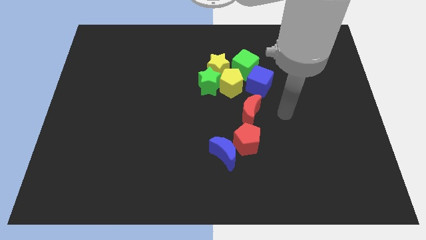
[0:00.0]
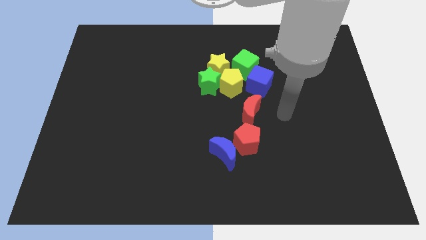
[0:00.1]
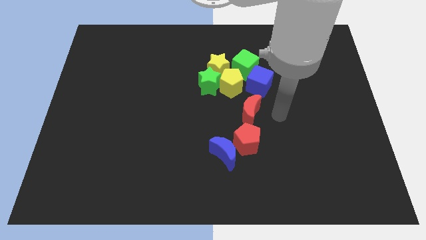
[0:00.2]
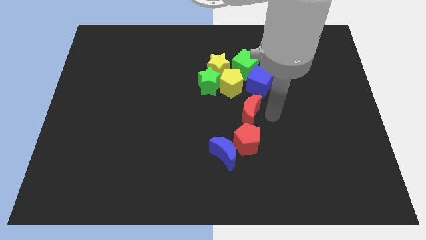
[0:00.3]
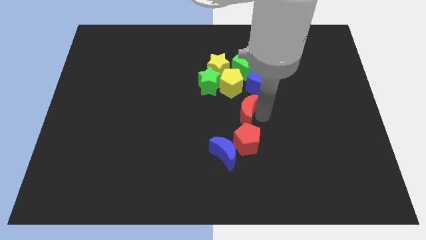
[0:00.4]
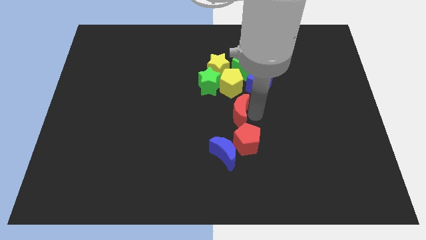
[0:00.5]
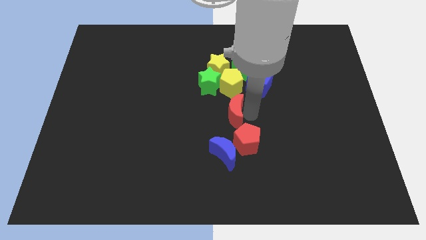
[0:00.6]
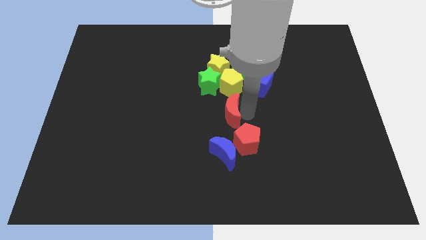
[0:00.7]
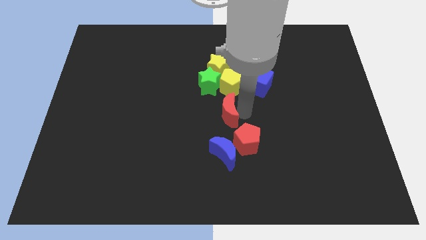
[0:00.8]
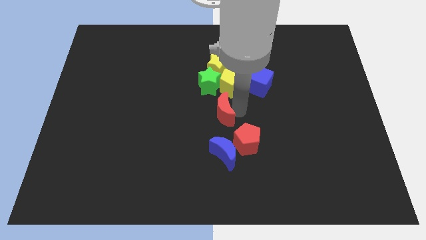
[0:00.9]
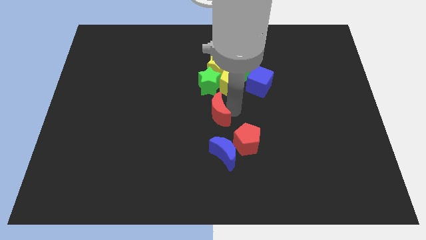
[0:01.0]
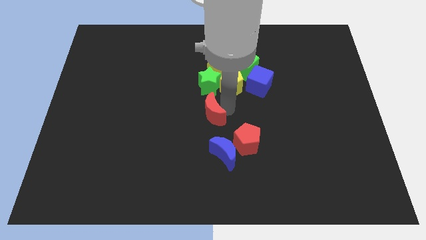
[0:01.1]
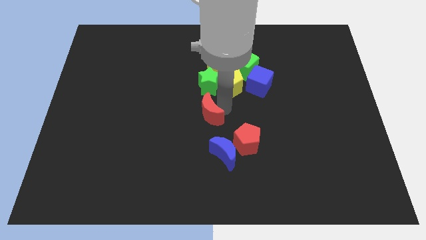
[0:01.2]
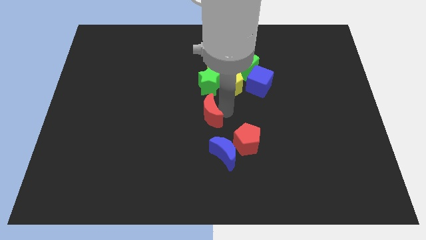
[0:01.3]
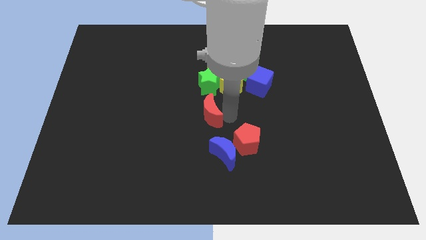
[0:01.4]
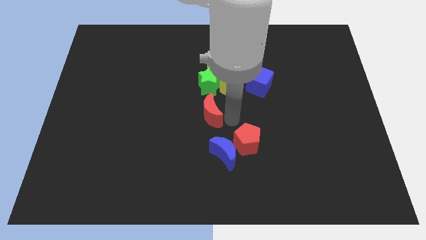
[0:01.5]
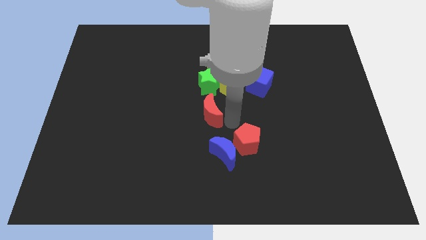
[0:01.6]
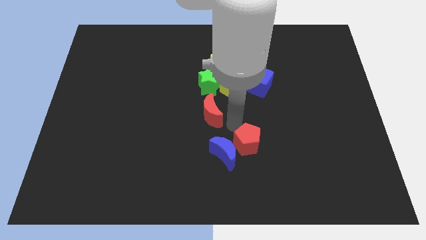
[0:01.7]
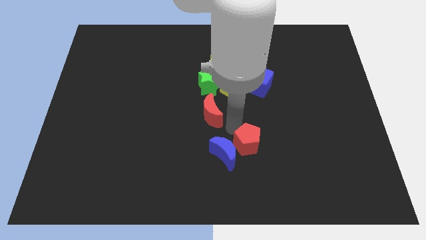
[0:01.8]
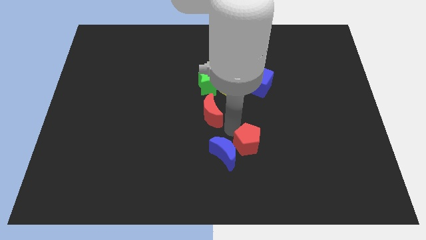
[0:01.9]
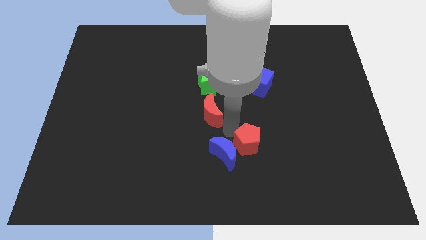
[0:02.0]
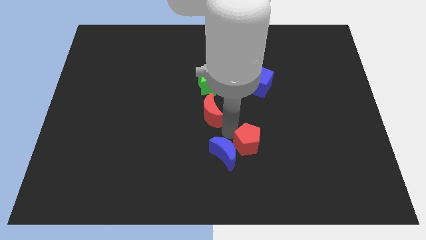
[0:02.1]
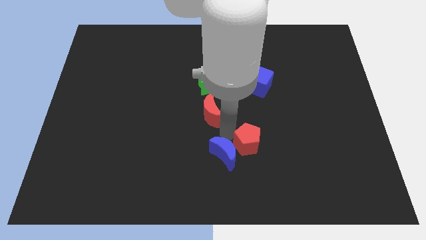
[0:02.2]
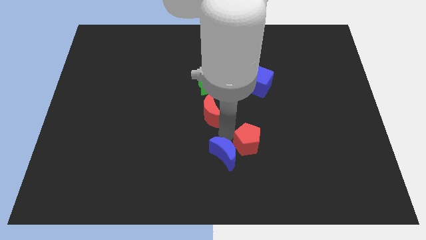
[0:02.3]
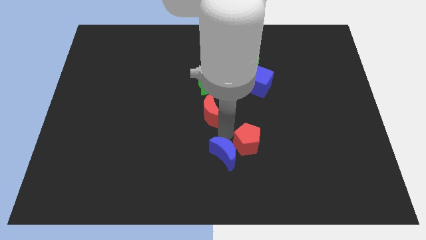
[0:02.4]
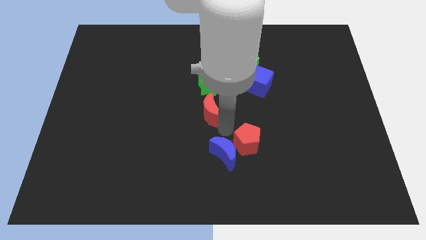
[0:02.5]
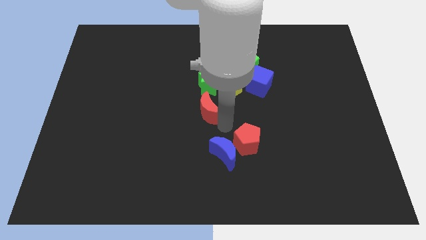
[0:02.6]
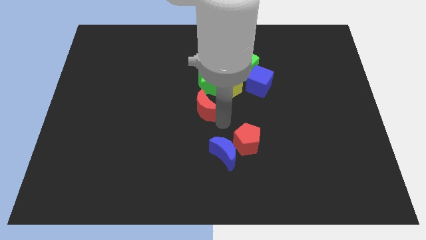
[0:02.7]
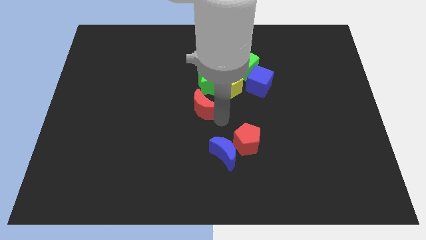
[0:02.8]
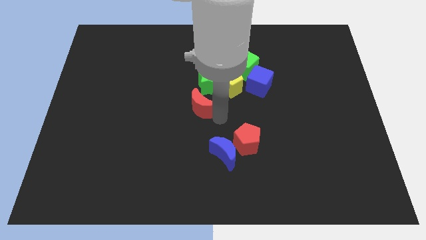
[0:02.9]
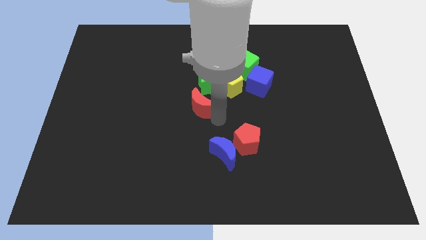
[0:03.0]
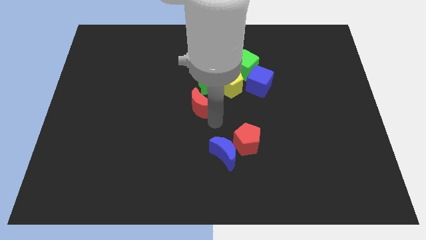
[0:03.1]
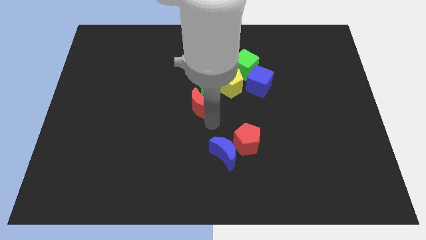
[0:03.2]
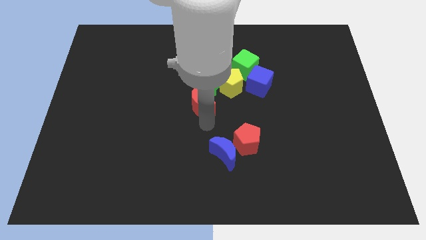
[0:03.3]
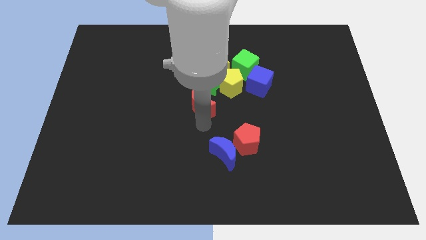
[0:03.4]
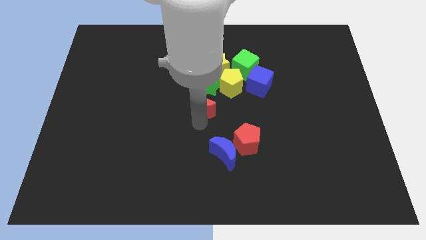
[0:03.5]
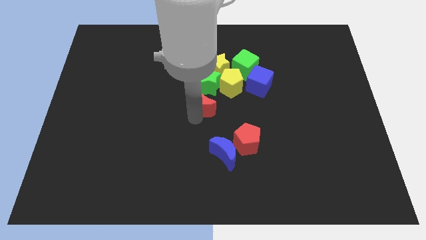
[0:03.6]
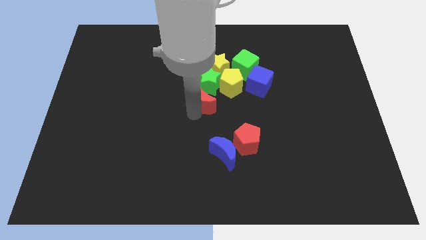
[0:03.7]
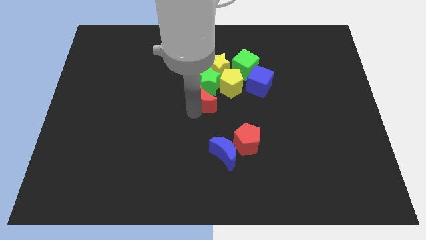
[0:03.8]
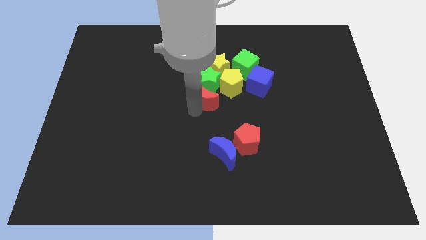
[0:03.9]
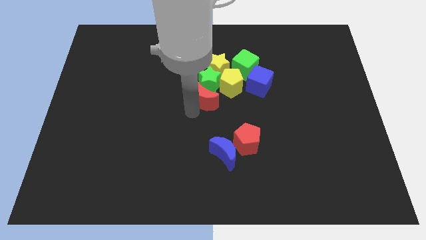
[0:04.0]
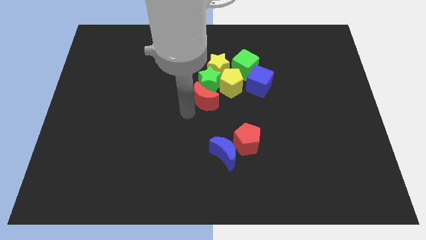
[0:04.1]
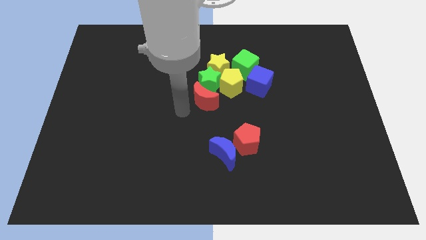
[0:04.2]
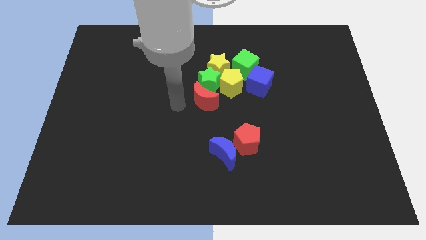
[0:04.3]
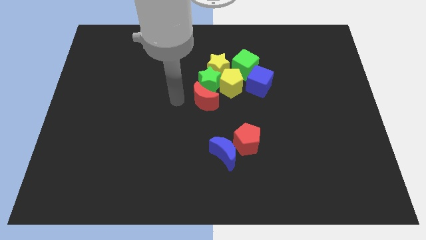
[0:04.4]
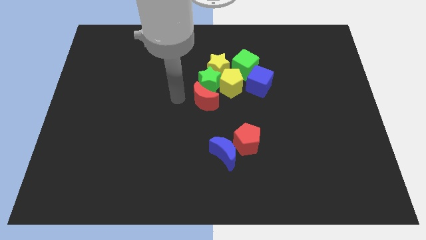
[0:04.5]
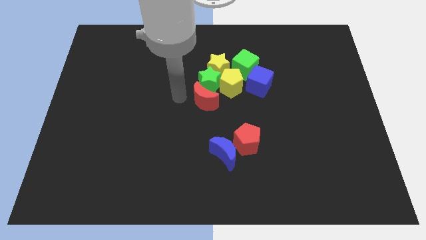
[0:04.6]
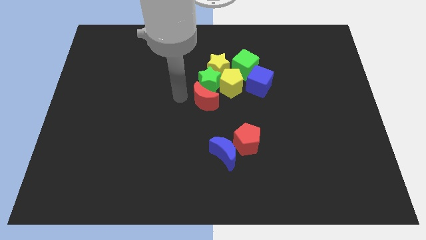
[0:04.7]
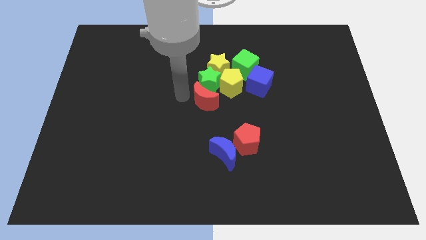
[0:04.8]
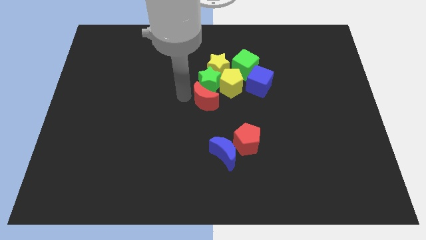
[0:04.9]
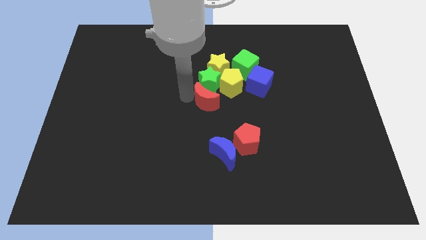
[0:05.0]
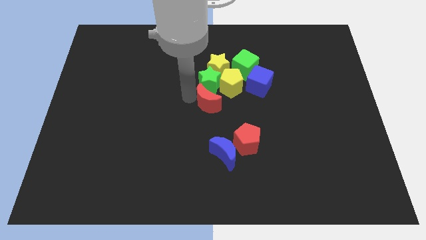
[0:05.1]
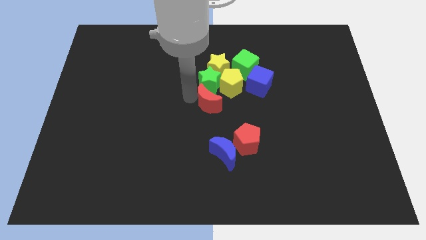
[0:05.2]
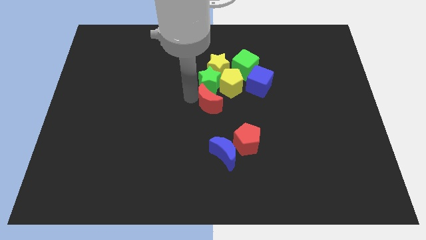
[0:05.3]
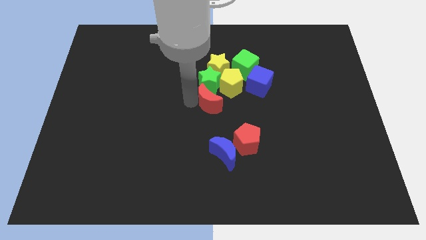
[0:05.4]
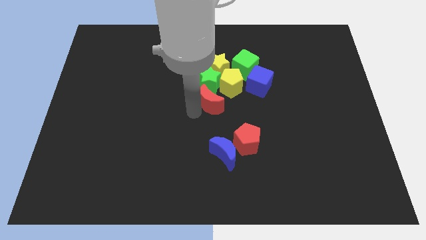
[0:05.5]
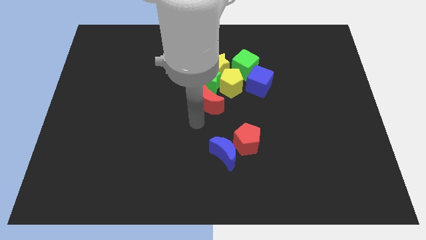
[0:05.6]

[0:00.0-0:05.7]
place the red moon in the center of the board

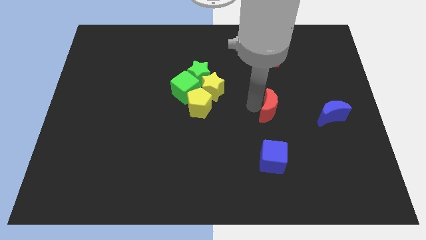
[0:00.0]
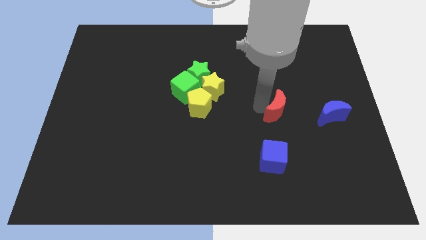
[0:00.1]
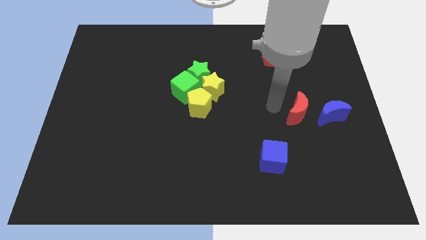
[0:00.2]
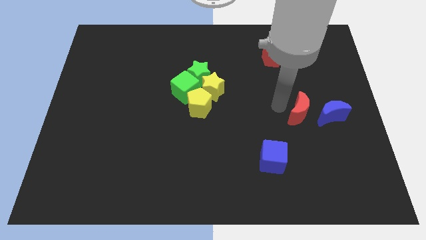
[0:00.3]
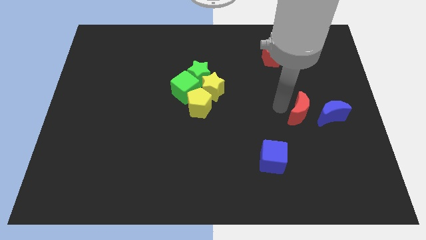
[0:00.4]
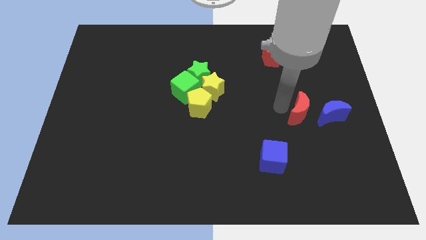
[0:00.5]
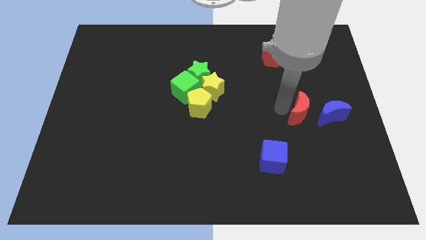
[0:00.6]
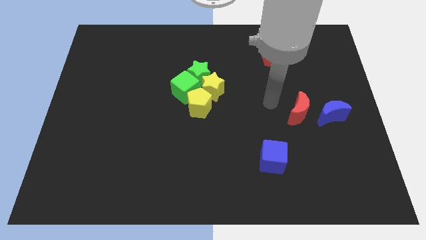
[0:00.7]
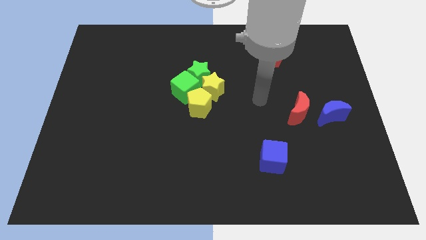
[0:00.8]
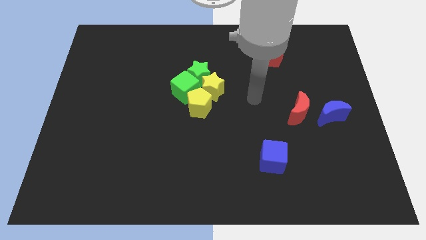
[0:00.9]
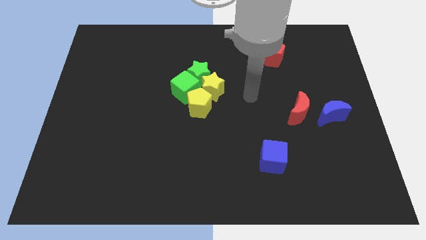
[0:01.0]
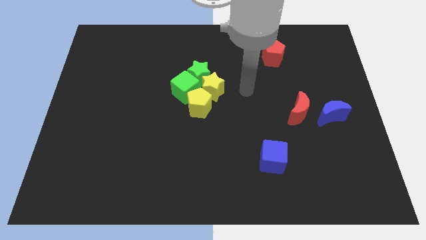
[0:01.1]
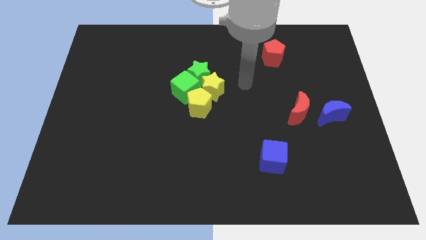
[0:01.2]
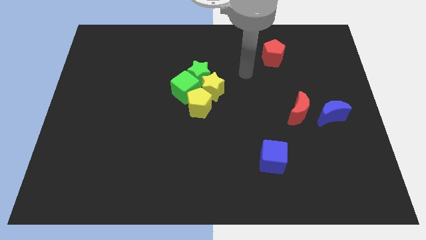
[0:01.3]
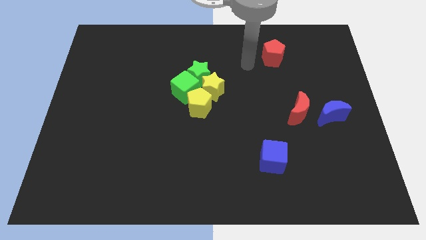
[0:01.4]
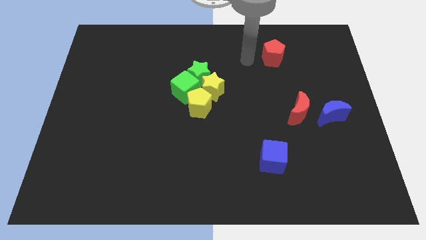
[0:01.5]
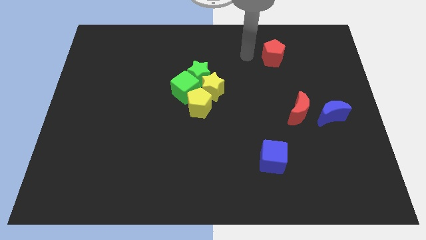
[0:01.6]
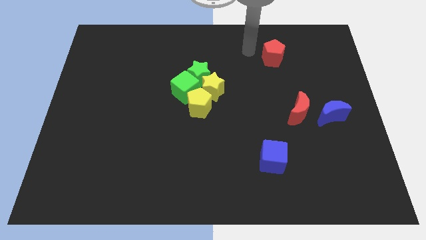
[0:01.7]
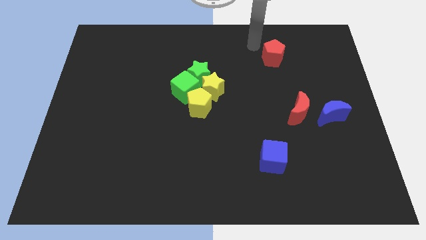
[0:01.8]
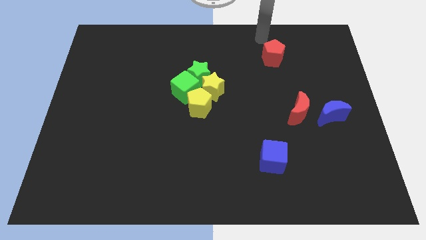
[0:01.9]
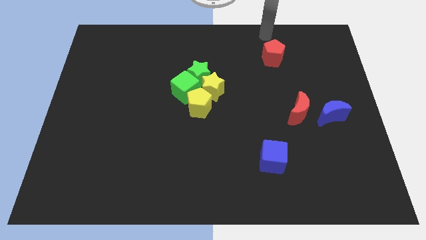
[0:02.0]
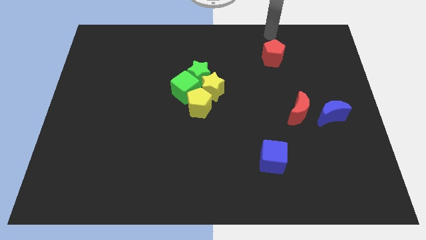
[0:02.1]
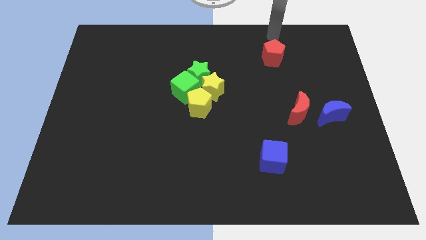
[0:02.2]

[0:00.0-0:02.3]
push the red moon and point your arm above the red pentagon

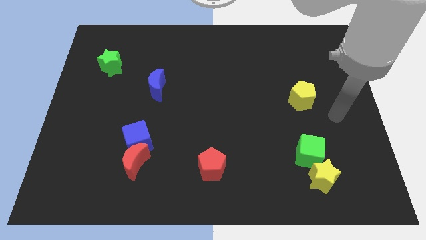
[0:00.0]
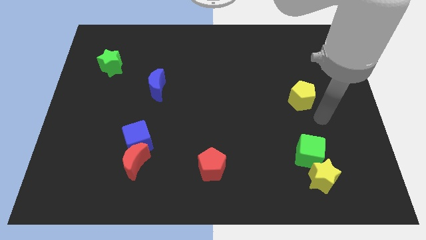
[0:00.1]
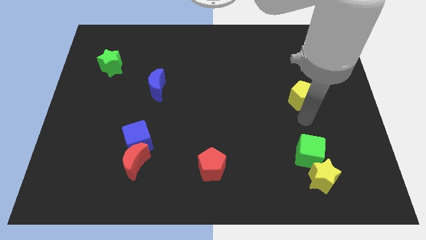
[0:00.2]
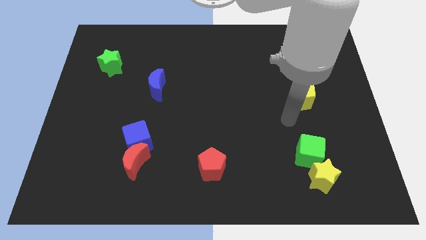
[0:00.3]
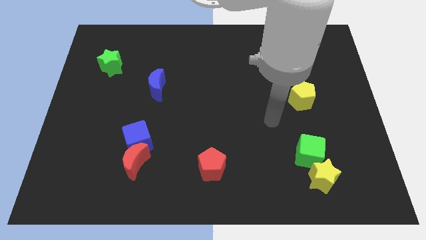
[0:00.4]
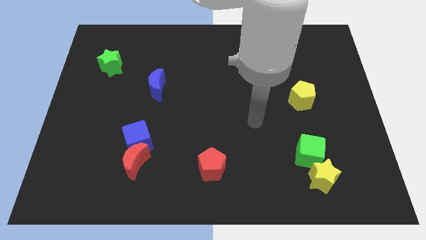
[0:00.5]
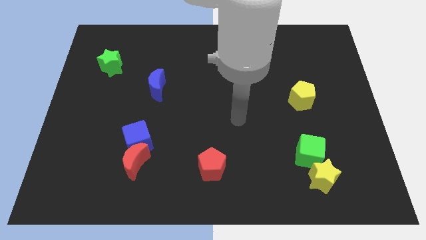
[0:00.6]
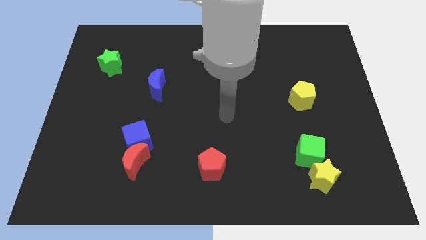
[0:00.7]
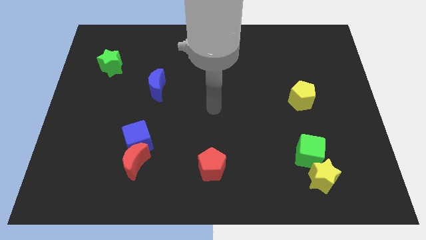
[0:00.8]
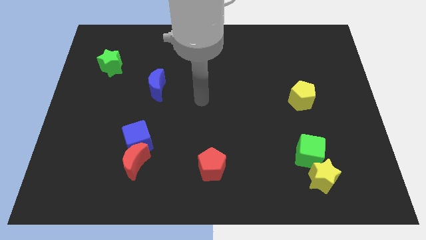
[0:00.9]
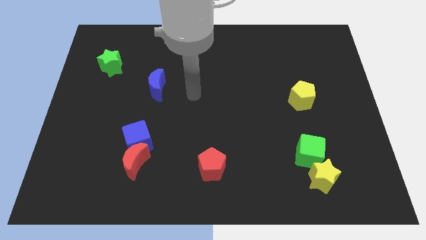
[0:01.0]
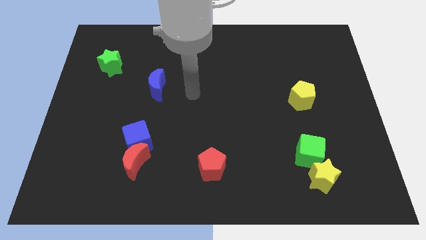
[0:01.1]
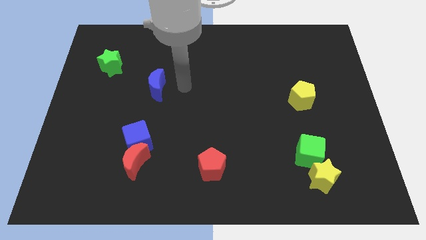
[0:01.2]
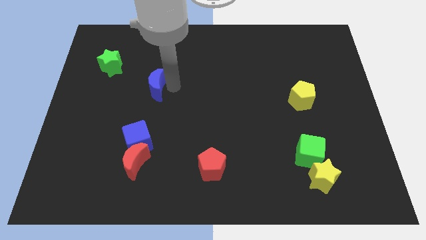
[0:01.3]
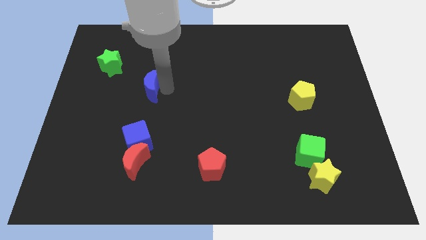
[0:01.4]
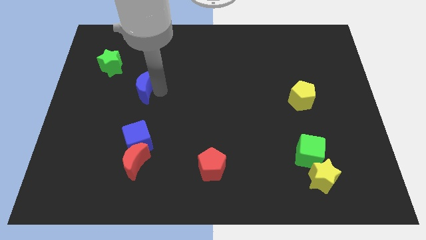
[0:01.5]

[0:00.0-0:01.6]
touch the right side of the blue crescent
